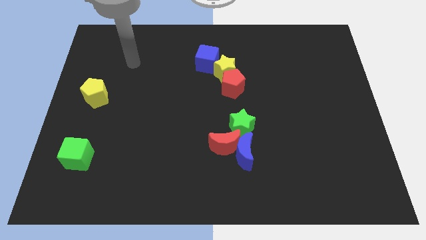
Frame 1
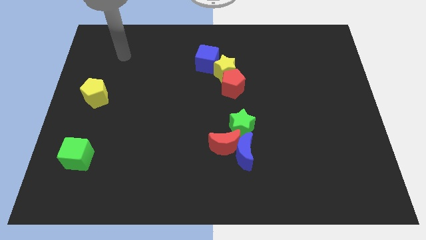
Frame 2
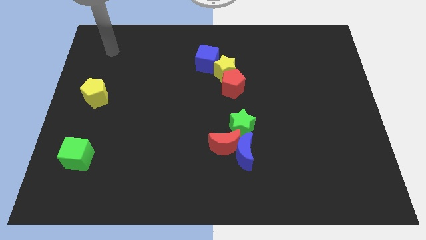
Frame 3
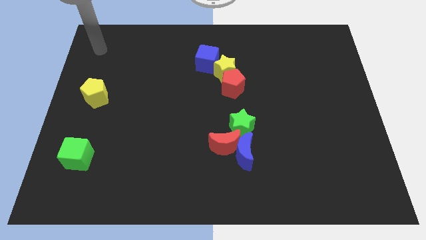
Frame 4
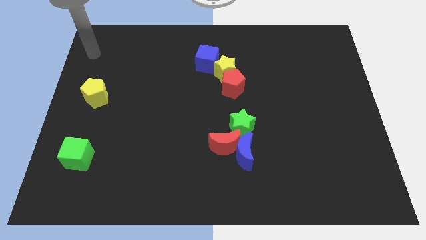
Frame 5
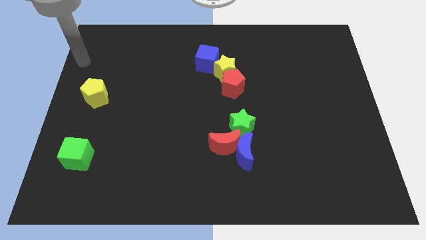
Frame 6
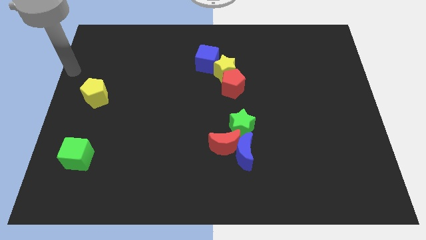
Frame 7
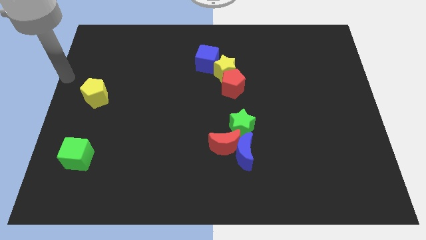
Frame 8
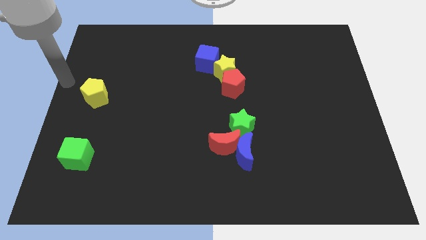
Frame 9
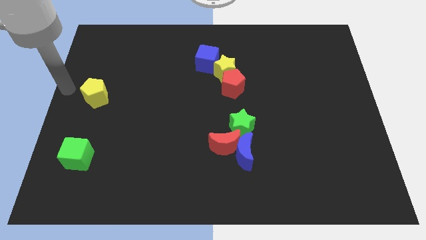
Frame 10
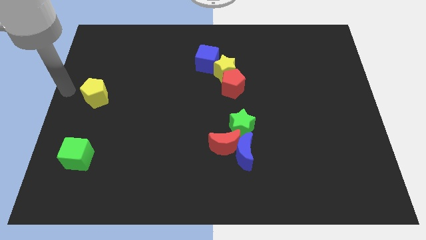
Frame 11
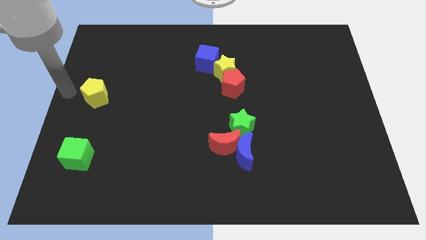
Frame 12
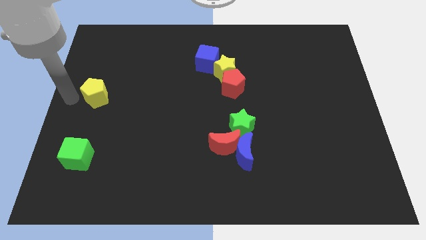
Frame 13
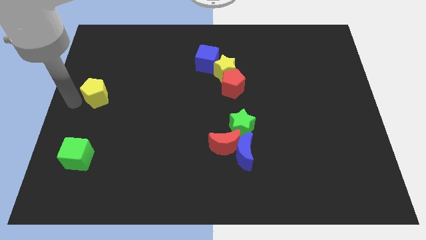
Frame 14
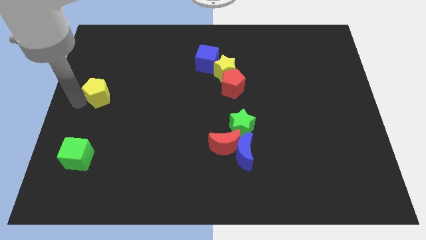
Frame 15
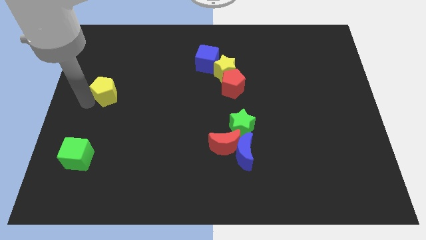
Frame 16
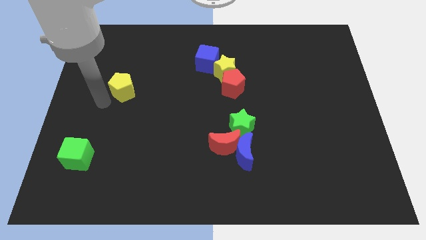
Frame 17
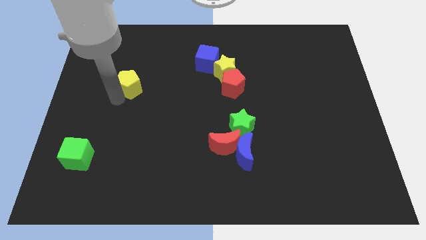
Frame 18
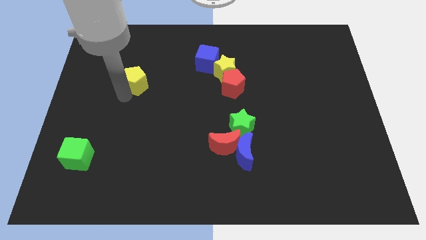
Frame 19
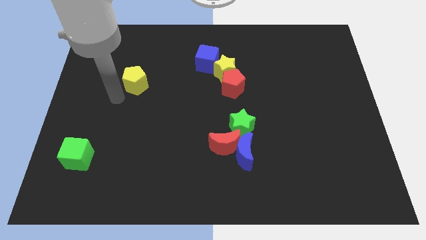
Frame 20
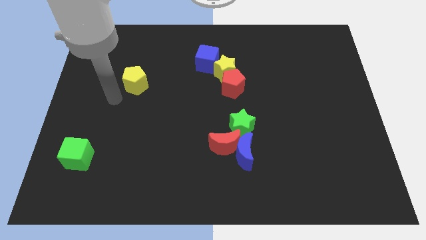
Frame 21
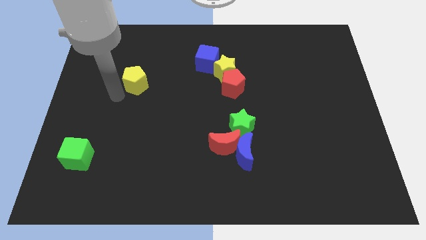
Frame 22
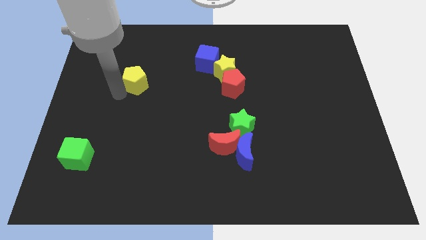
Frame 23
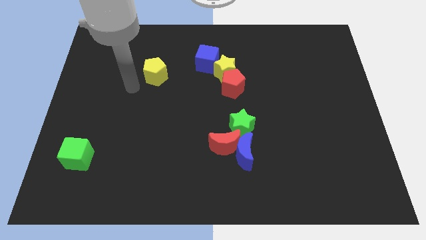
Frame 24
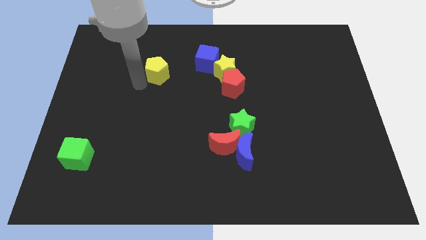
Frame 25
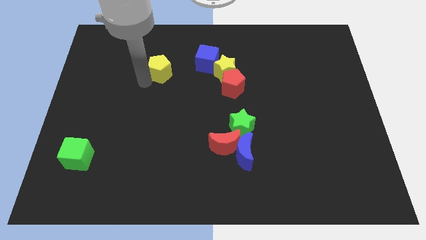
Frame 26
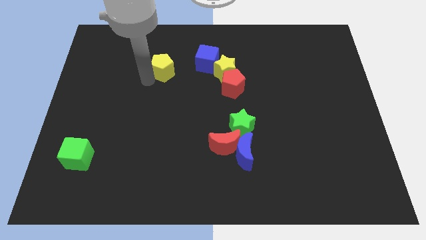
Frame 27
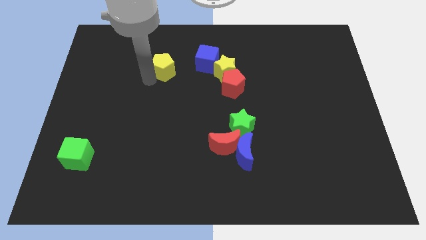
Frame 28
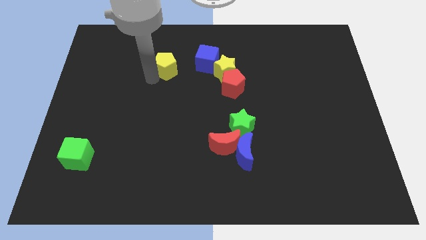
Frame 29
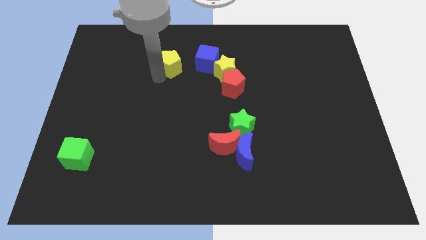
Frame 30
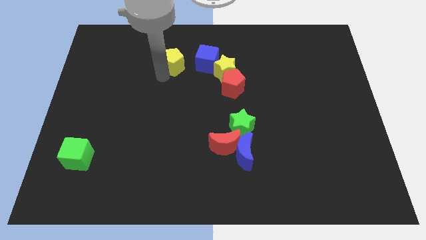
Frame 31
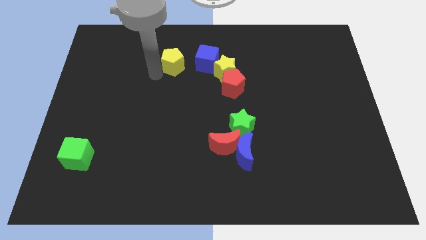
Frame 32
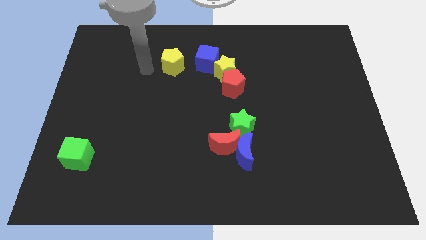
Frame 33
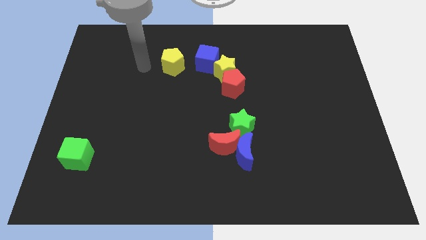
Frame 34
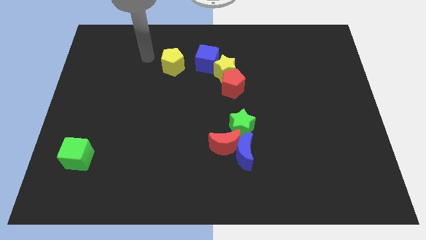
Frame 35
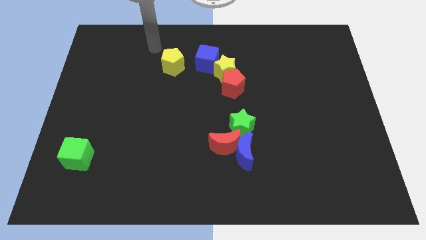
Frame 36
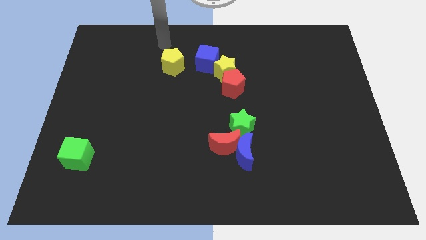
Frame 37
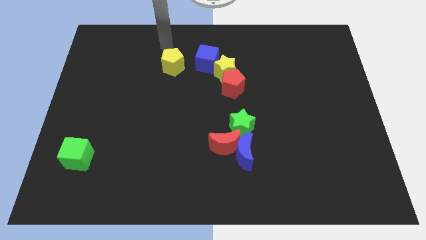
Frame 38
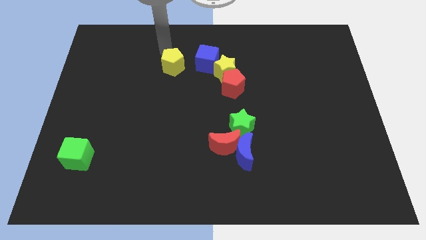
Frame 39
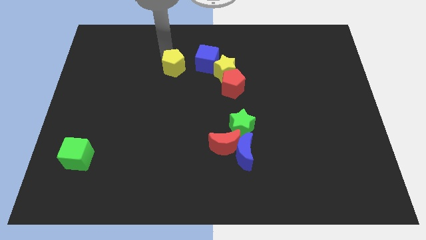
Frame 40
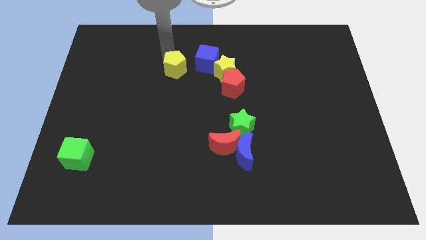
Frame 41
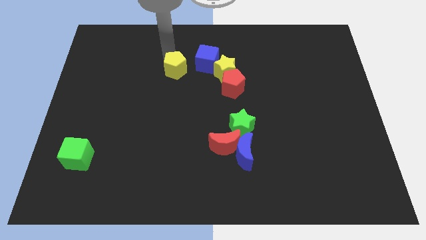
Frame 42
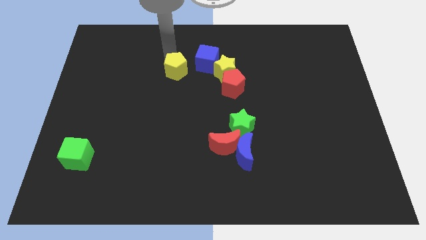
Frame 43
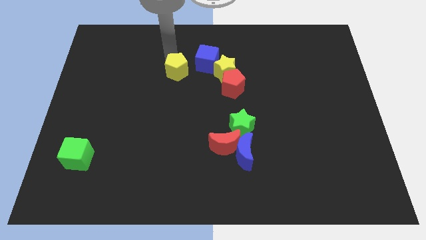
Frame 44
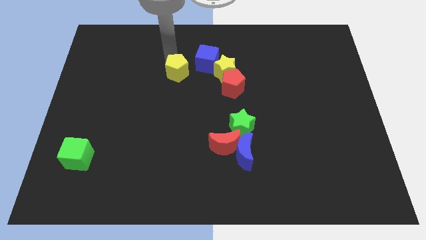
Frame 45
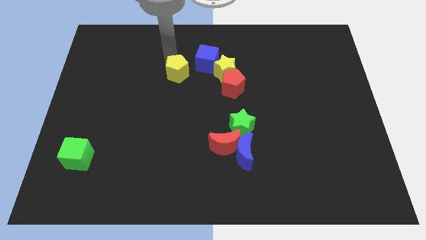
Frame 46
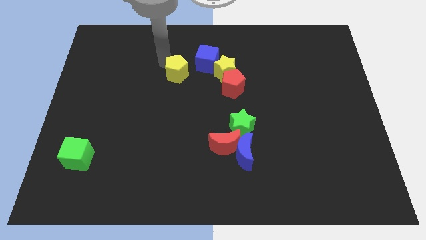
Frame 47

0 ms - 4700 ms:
place the yellow pentagon to the left side of the blue cube

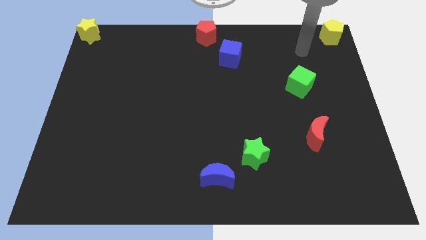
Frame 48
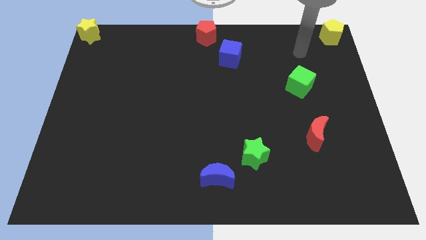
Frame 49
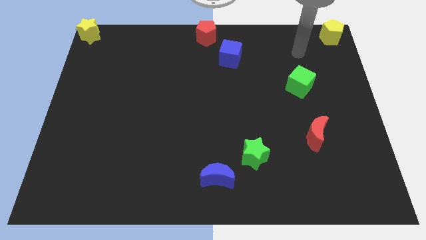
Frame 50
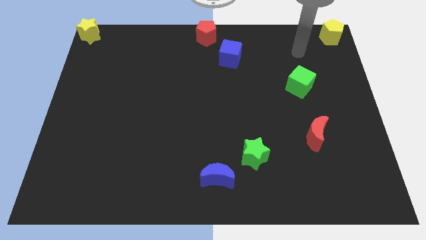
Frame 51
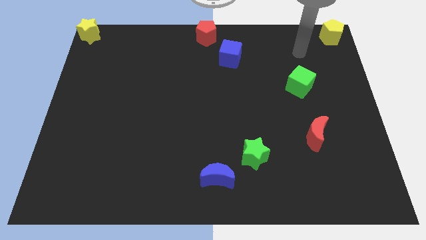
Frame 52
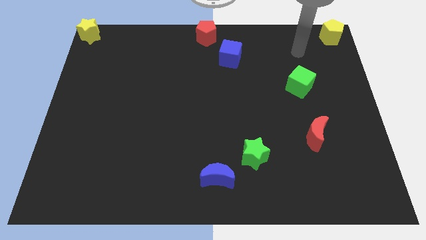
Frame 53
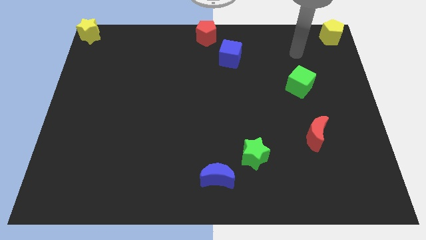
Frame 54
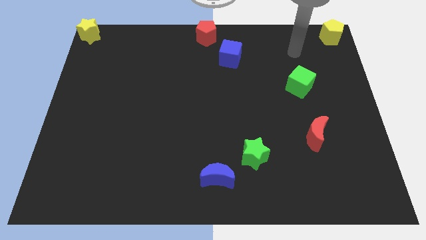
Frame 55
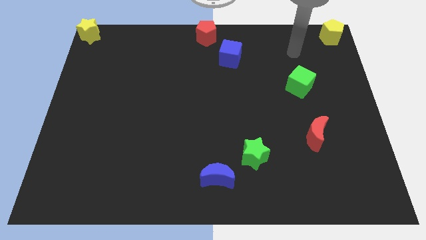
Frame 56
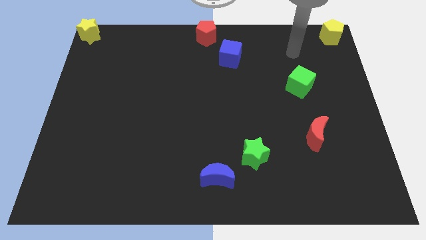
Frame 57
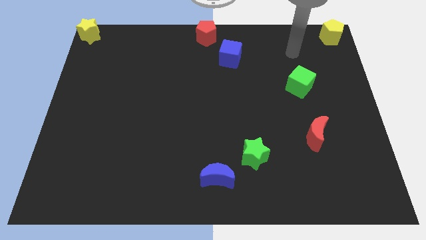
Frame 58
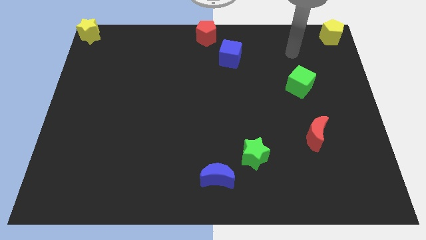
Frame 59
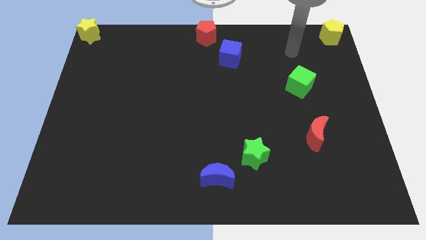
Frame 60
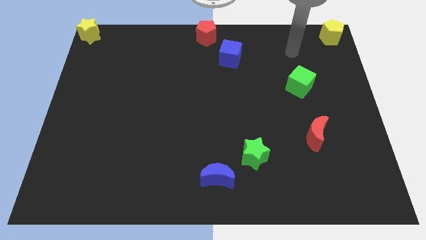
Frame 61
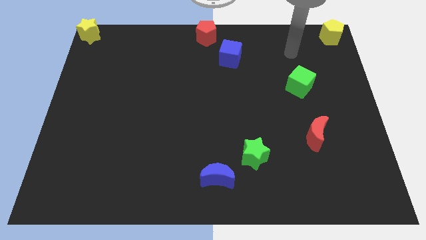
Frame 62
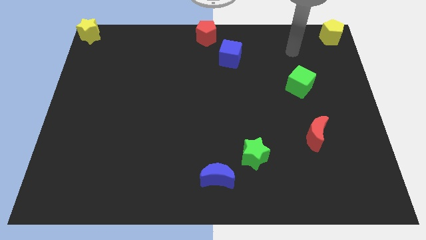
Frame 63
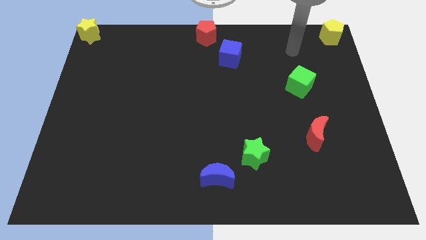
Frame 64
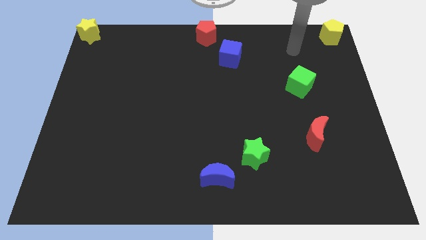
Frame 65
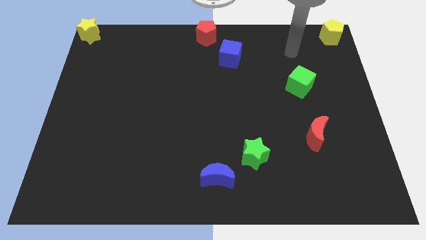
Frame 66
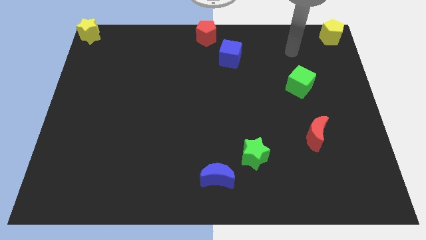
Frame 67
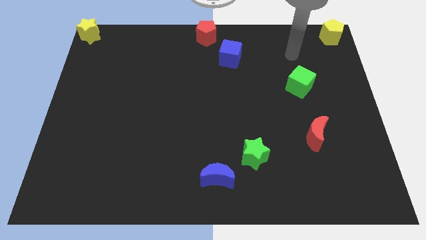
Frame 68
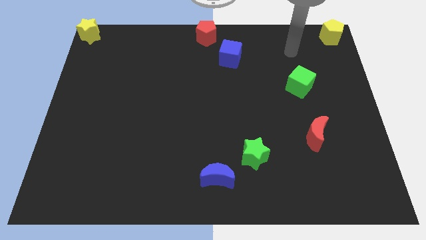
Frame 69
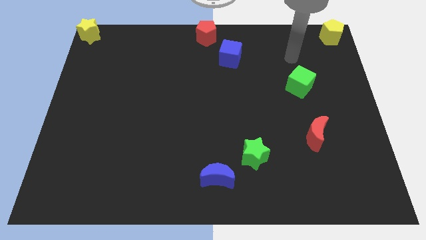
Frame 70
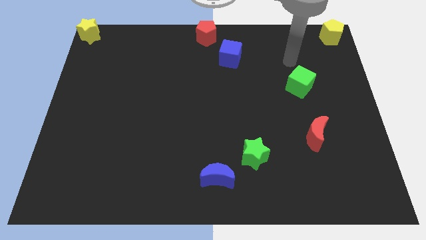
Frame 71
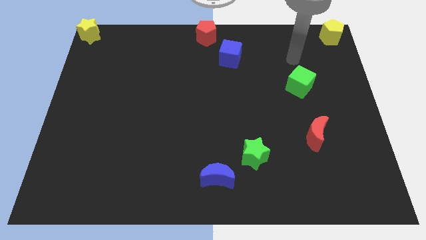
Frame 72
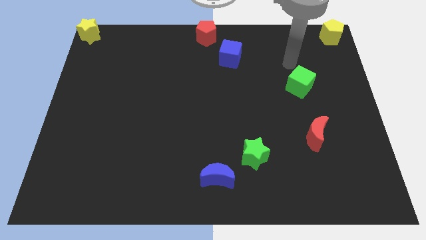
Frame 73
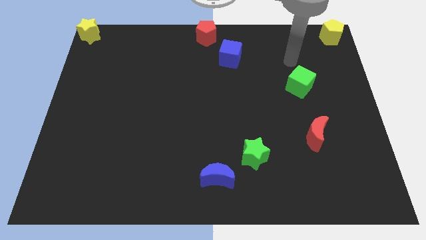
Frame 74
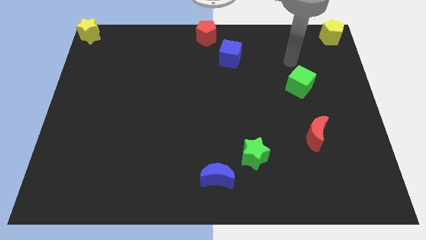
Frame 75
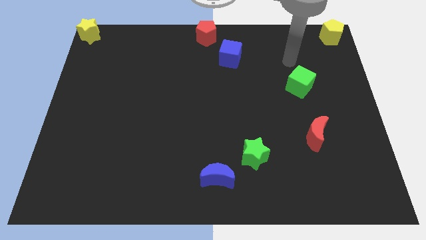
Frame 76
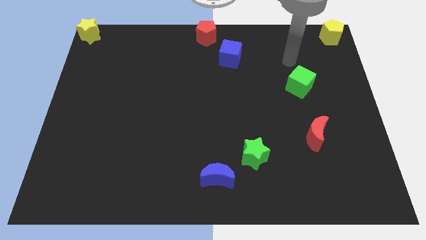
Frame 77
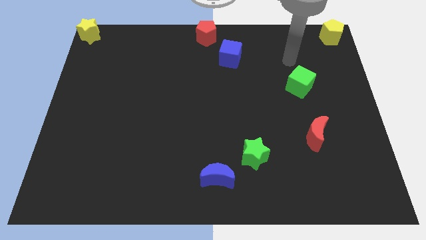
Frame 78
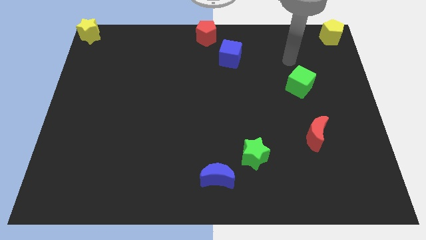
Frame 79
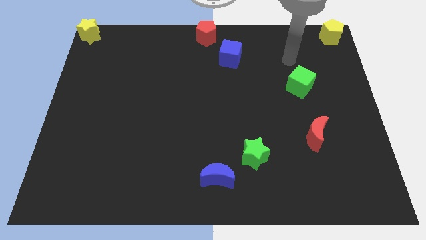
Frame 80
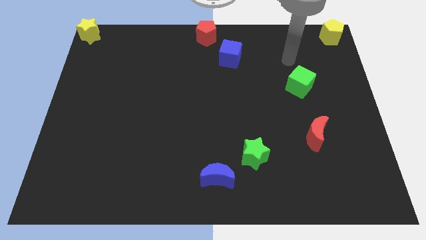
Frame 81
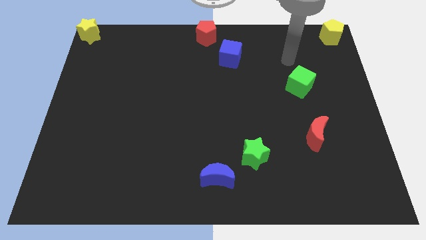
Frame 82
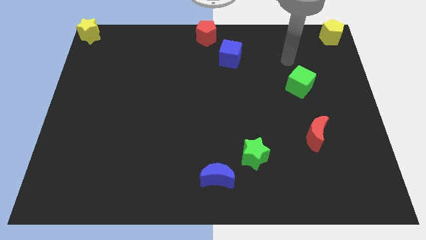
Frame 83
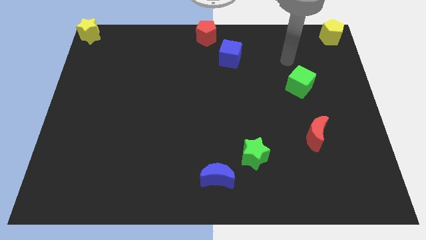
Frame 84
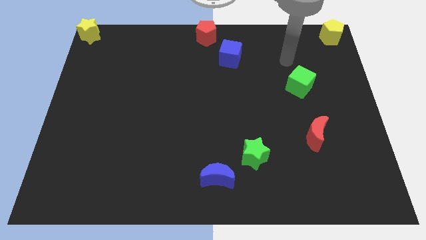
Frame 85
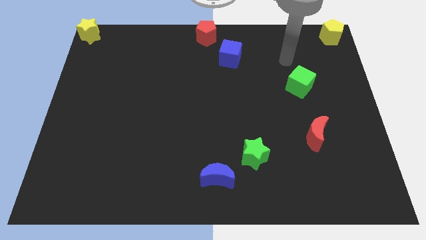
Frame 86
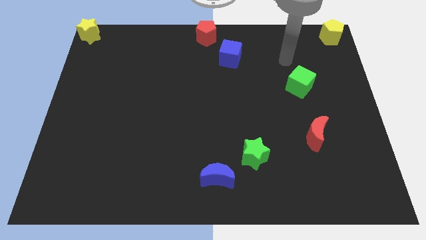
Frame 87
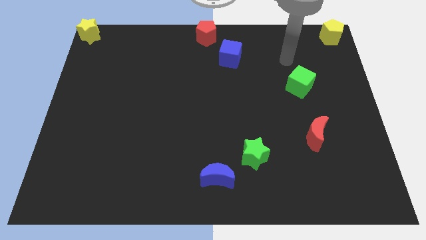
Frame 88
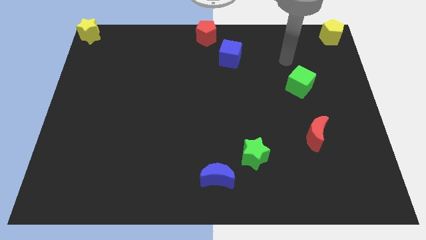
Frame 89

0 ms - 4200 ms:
move your arm away from the yellow pentagon
